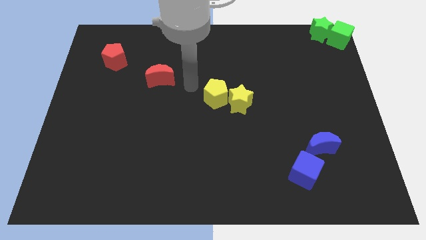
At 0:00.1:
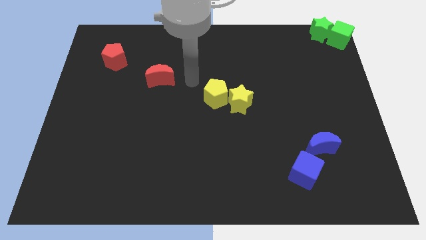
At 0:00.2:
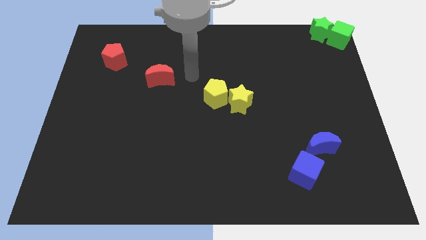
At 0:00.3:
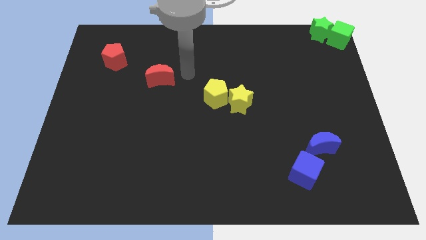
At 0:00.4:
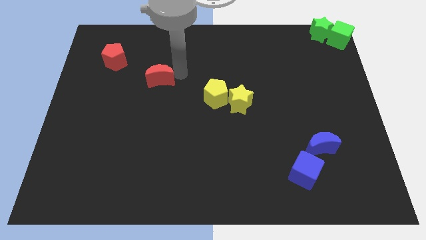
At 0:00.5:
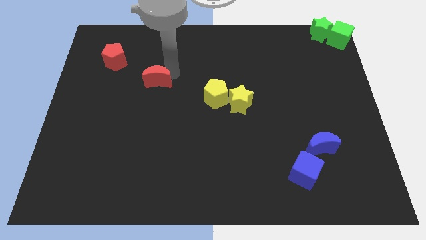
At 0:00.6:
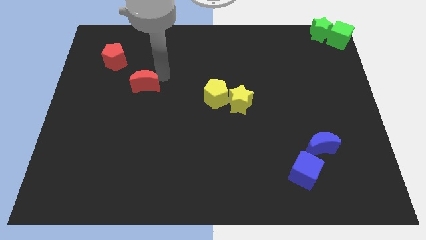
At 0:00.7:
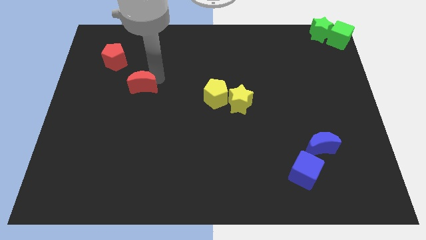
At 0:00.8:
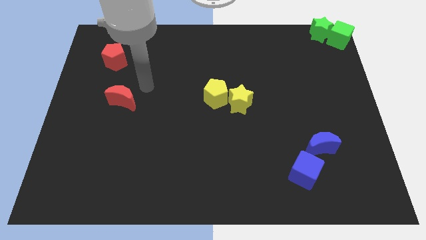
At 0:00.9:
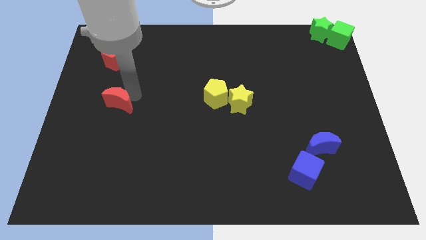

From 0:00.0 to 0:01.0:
place the red moon down to the red pentagon

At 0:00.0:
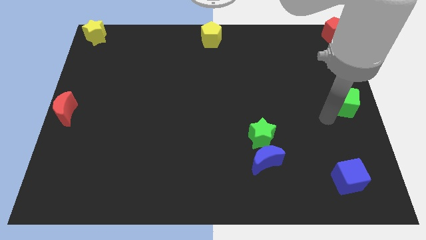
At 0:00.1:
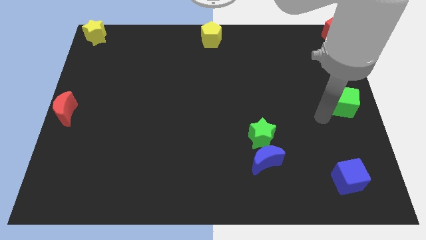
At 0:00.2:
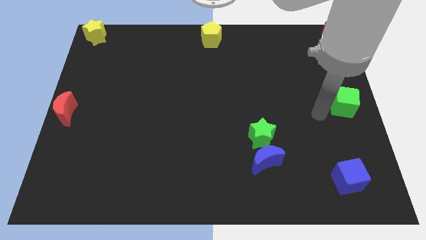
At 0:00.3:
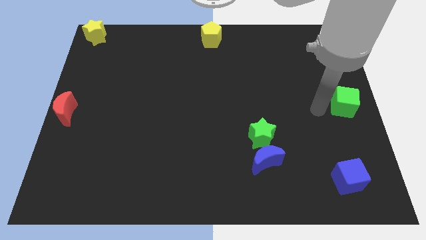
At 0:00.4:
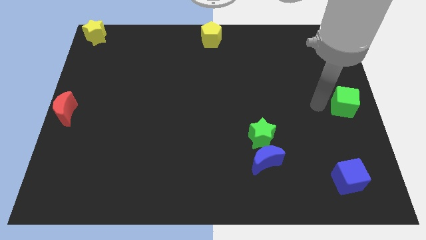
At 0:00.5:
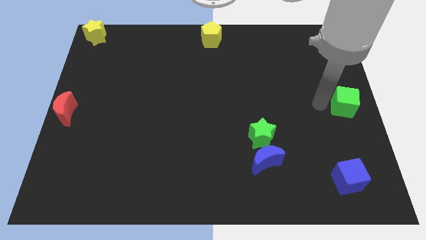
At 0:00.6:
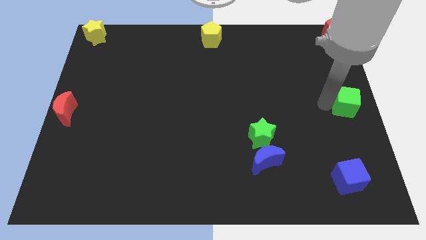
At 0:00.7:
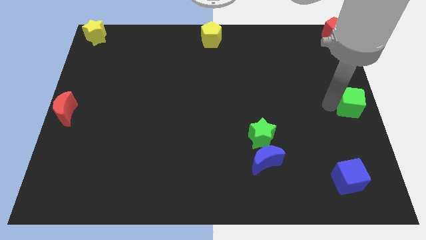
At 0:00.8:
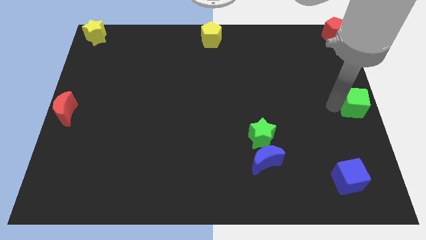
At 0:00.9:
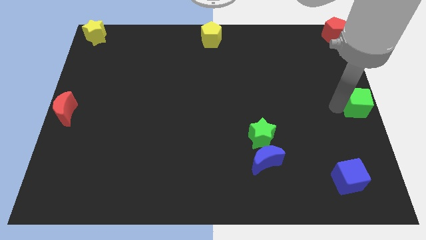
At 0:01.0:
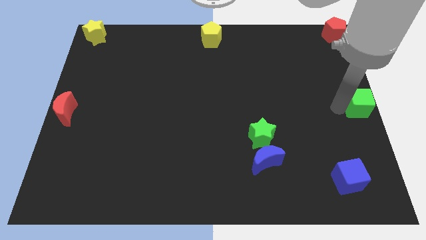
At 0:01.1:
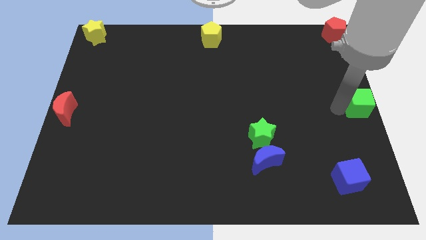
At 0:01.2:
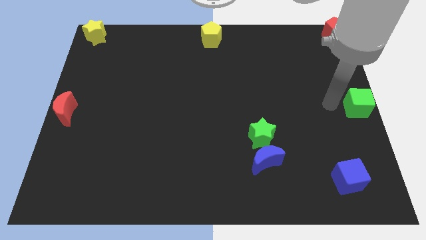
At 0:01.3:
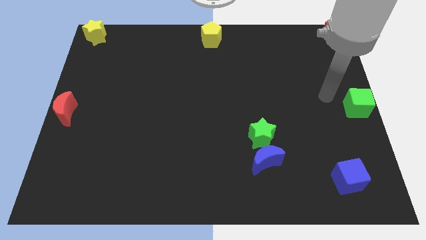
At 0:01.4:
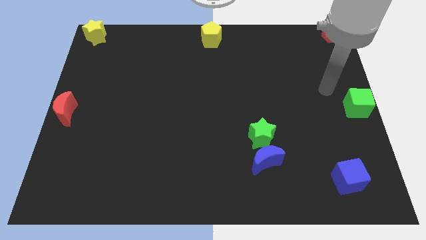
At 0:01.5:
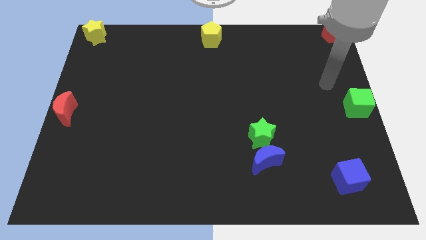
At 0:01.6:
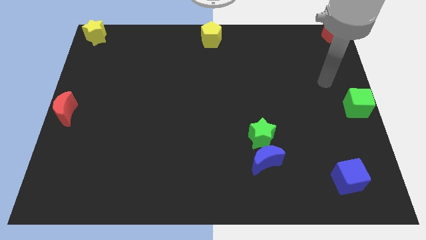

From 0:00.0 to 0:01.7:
move the green cube towards the right center of the board

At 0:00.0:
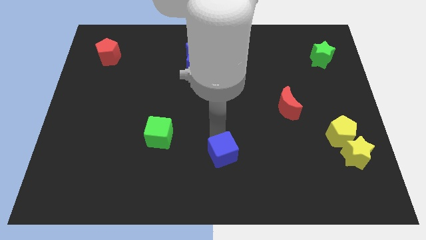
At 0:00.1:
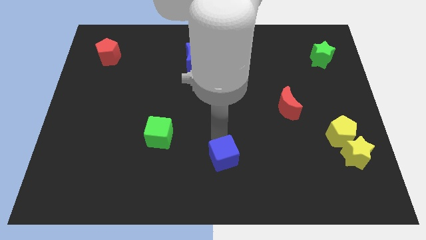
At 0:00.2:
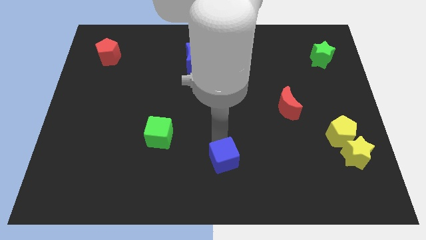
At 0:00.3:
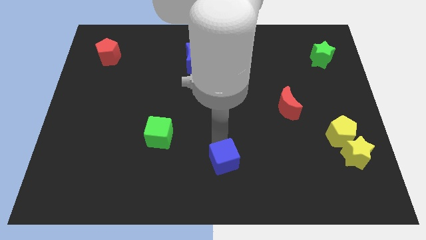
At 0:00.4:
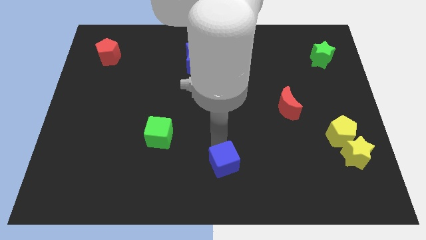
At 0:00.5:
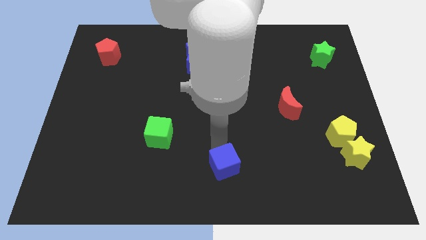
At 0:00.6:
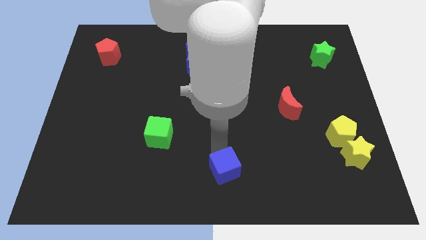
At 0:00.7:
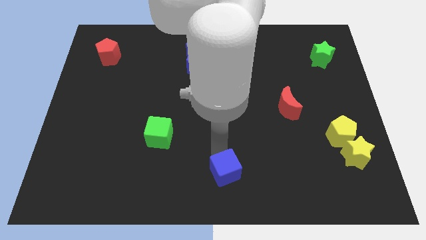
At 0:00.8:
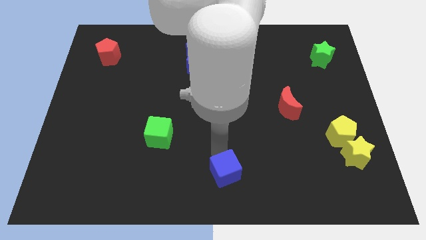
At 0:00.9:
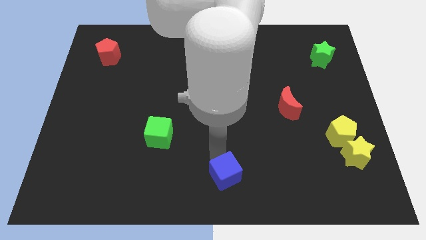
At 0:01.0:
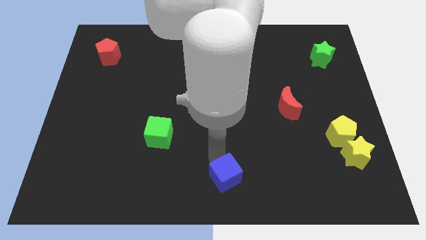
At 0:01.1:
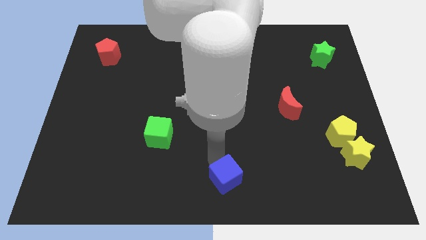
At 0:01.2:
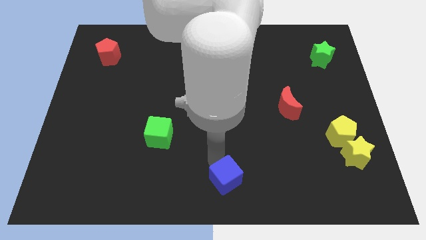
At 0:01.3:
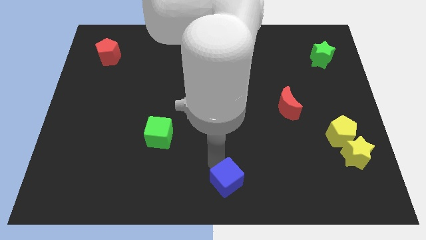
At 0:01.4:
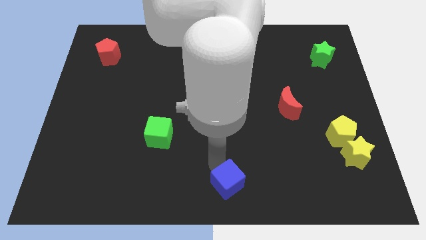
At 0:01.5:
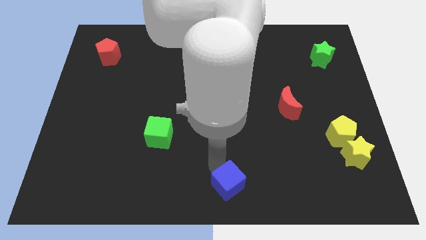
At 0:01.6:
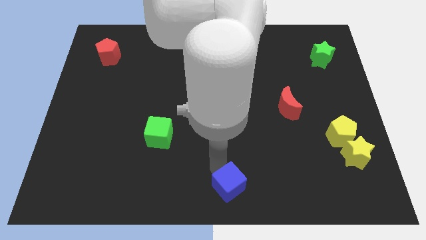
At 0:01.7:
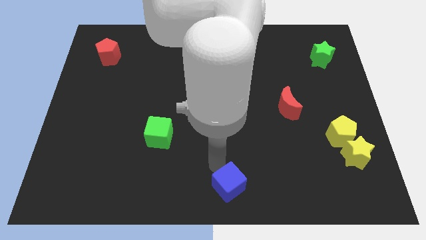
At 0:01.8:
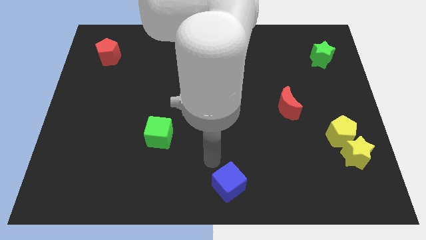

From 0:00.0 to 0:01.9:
place the blue cube at bottom center of the board

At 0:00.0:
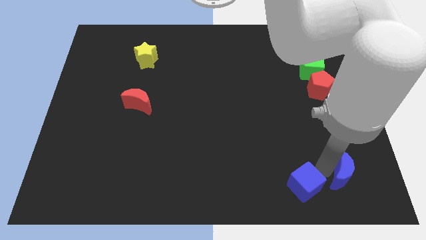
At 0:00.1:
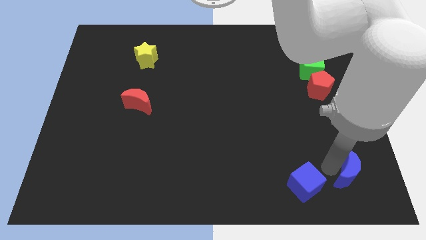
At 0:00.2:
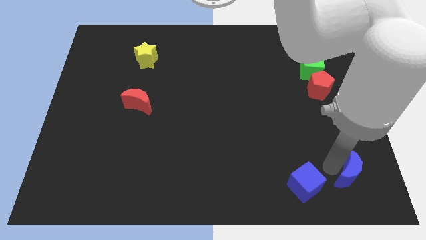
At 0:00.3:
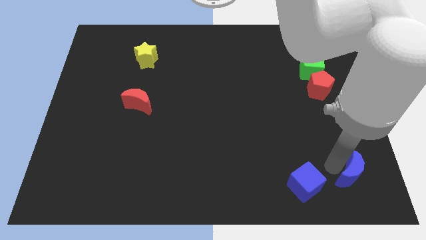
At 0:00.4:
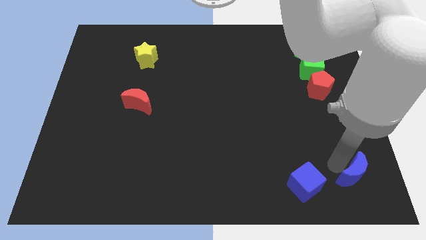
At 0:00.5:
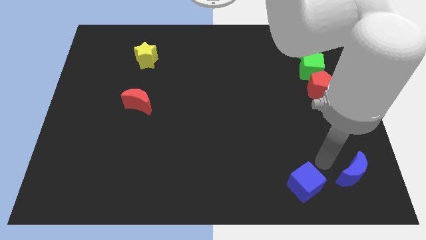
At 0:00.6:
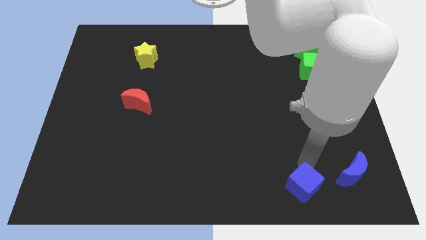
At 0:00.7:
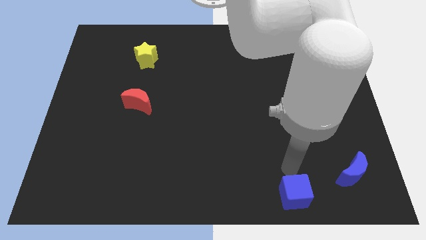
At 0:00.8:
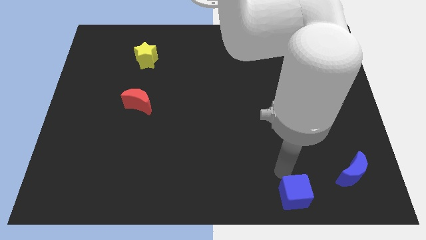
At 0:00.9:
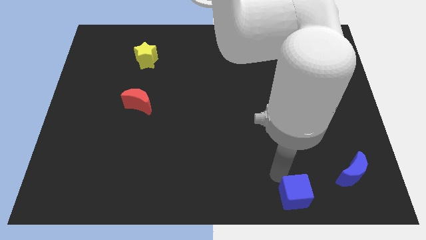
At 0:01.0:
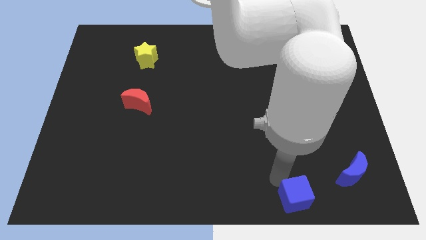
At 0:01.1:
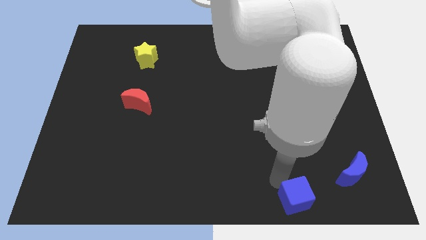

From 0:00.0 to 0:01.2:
push the blue crescent away from the blue cube

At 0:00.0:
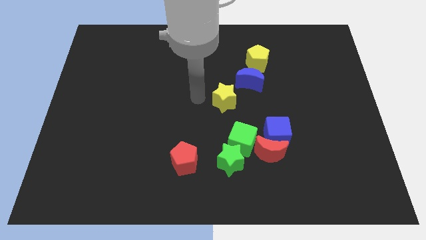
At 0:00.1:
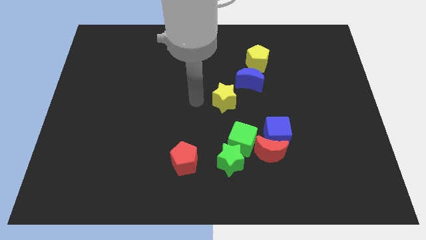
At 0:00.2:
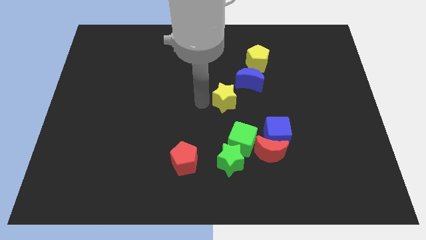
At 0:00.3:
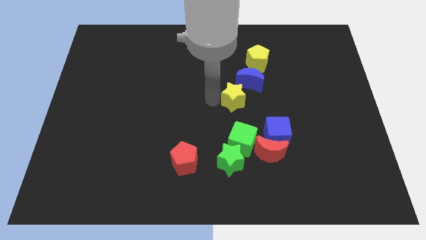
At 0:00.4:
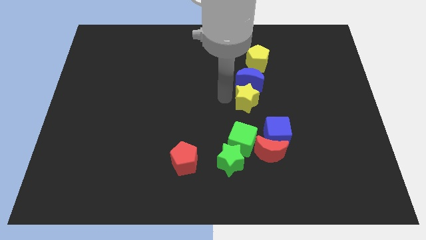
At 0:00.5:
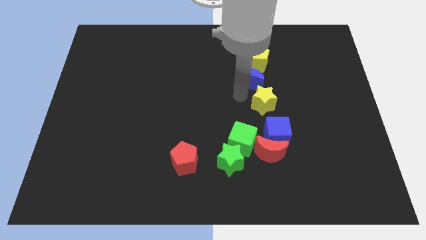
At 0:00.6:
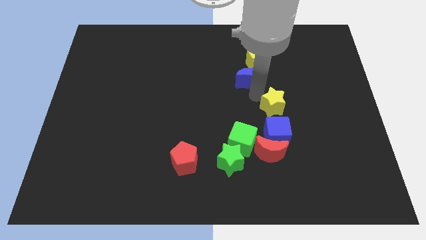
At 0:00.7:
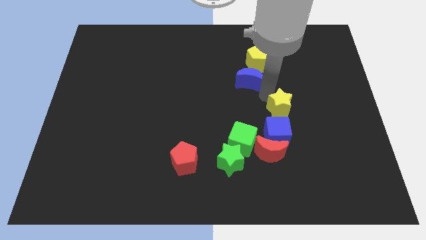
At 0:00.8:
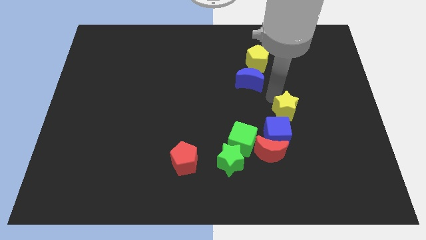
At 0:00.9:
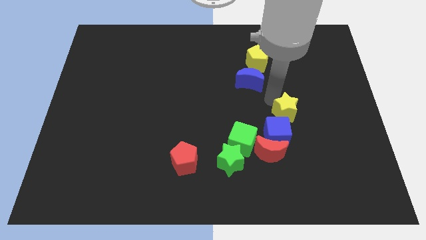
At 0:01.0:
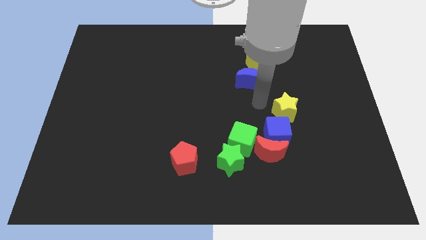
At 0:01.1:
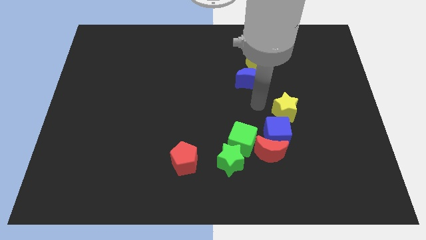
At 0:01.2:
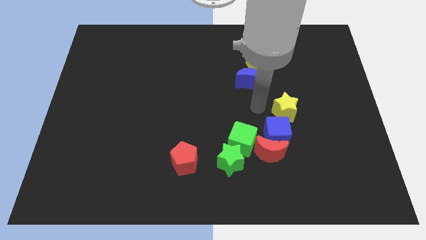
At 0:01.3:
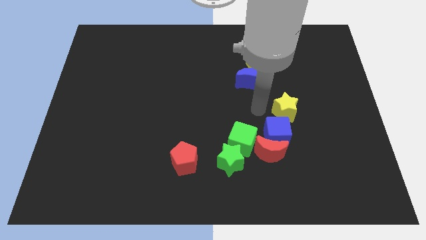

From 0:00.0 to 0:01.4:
move the yellow star above the blue cube

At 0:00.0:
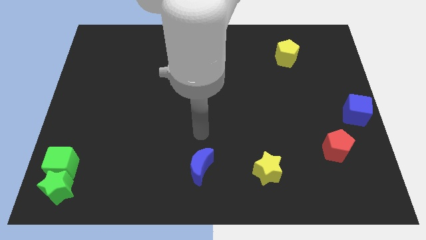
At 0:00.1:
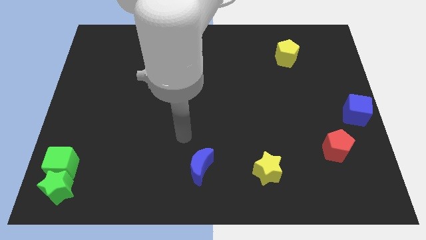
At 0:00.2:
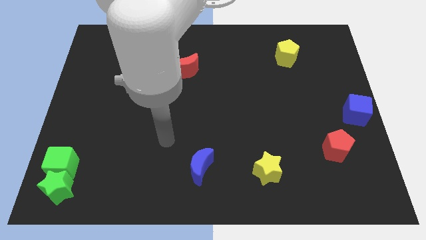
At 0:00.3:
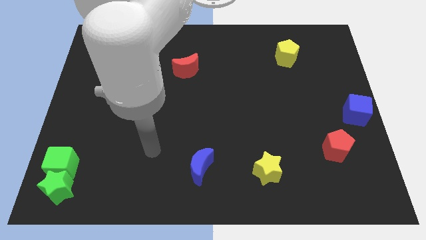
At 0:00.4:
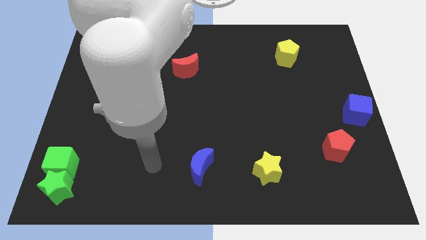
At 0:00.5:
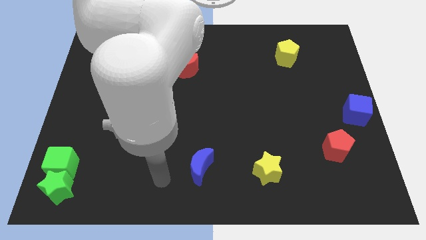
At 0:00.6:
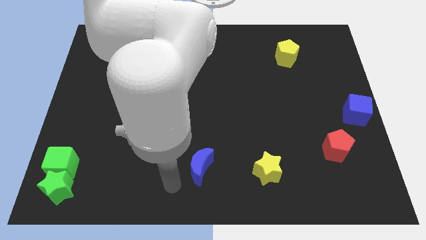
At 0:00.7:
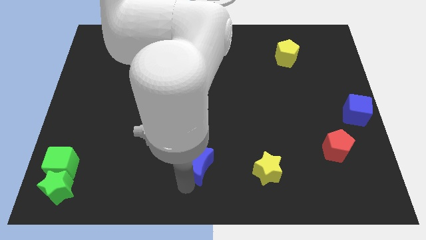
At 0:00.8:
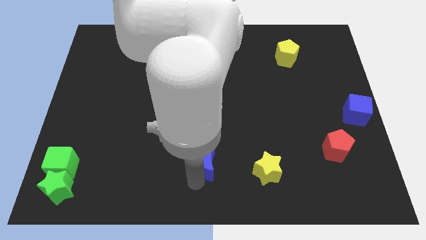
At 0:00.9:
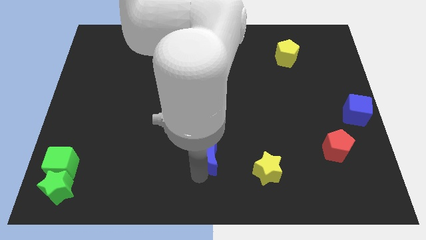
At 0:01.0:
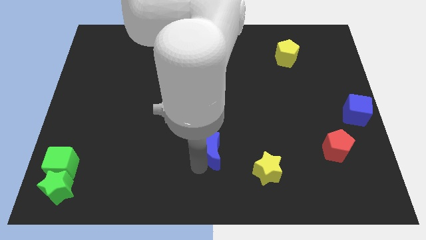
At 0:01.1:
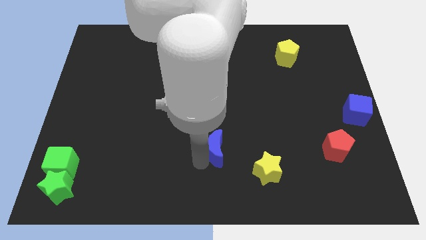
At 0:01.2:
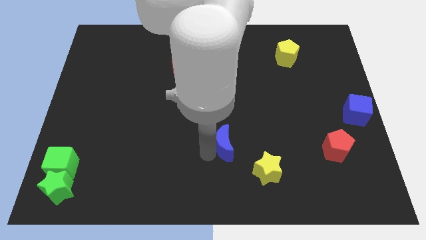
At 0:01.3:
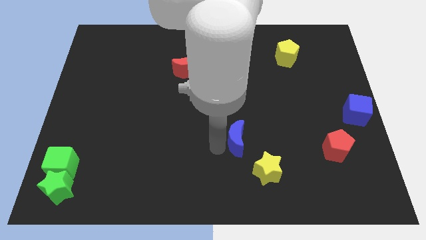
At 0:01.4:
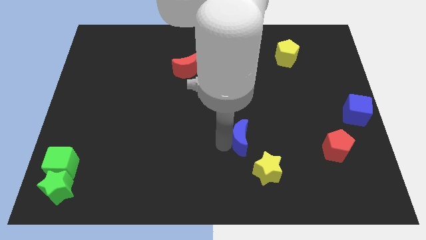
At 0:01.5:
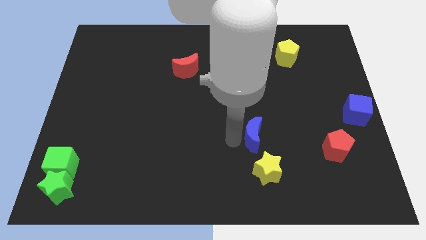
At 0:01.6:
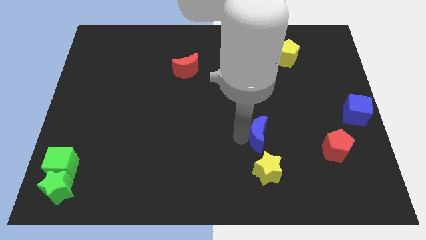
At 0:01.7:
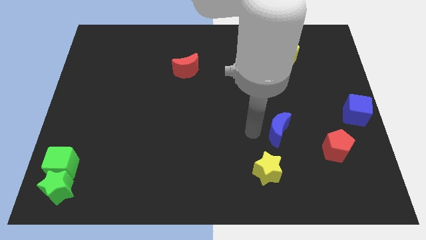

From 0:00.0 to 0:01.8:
place the blue moon above the yellow star

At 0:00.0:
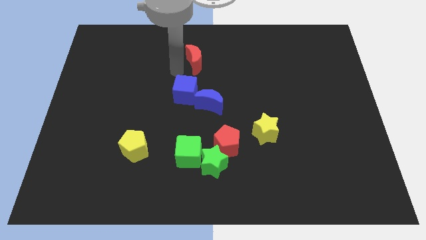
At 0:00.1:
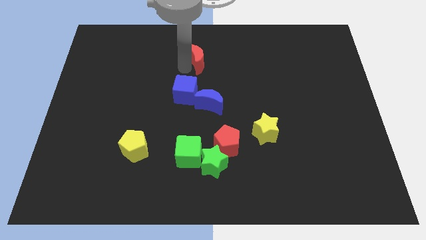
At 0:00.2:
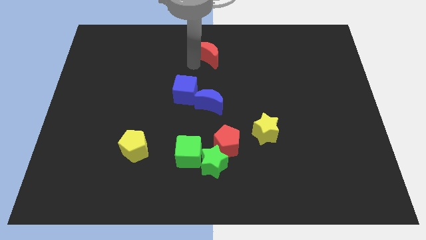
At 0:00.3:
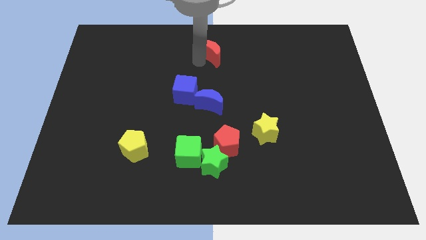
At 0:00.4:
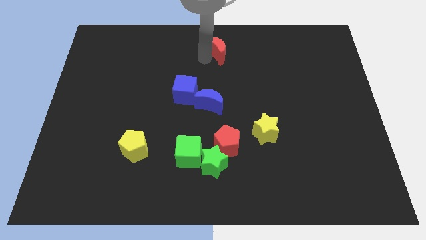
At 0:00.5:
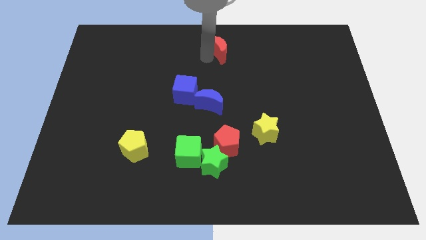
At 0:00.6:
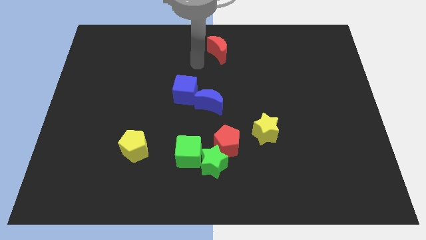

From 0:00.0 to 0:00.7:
slightly move the red moon diagonally up
